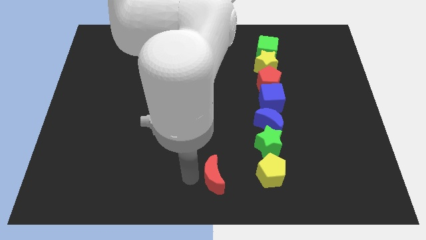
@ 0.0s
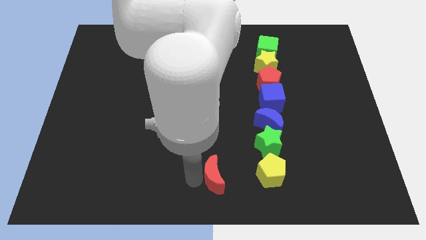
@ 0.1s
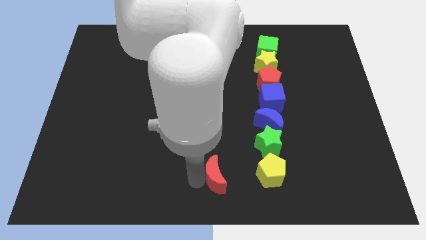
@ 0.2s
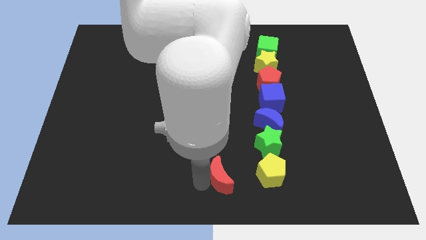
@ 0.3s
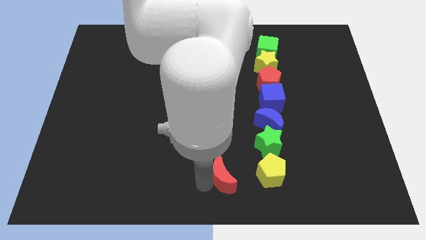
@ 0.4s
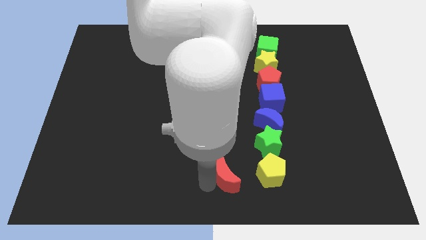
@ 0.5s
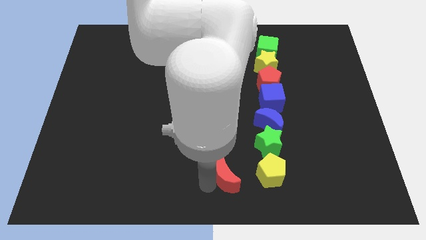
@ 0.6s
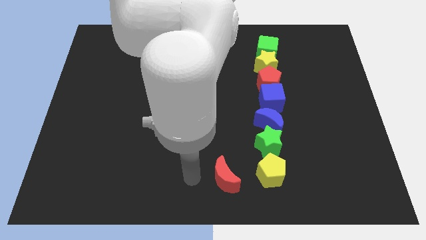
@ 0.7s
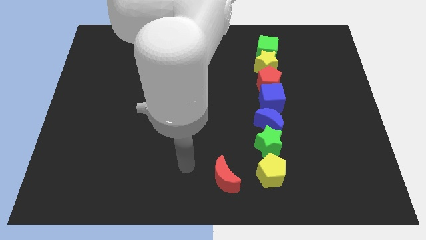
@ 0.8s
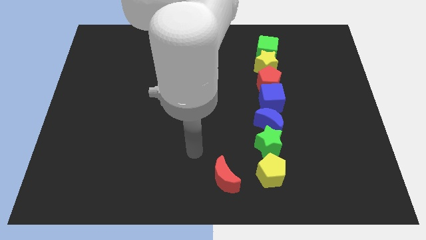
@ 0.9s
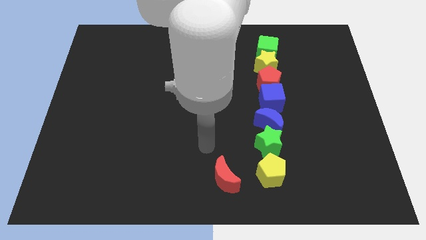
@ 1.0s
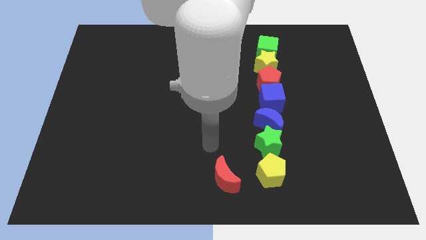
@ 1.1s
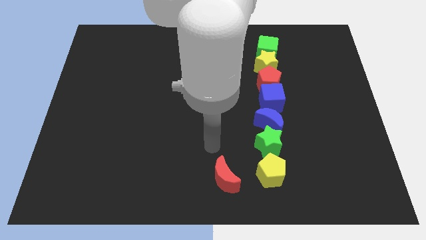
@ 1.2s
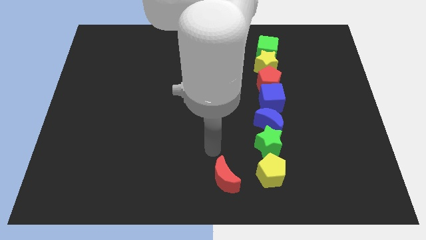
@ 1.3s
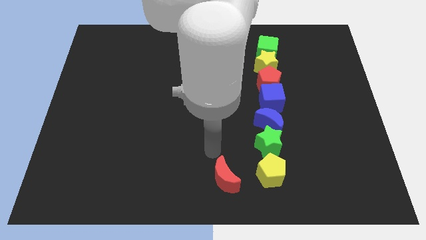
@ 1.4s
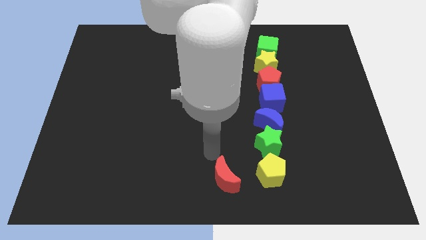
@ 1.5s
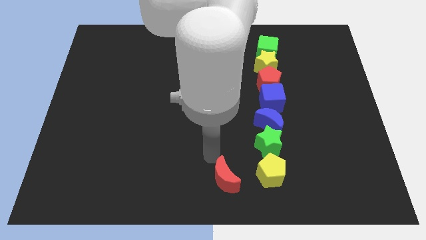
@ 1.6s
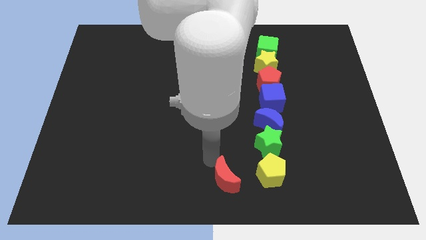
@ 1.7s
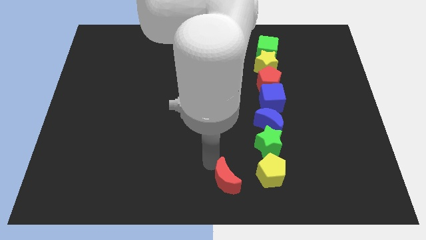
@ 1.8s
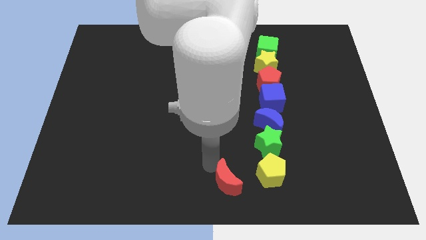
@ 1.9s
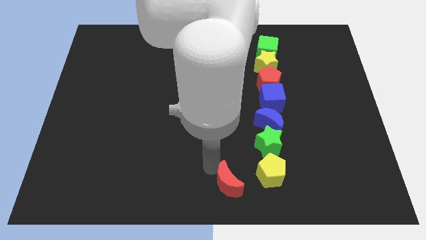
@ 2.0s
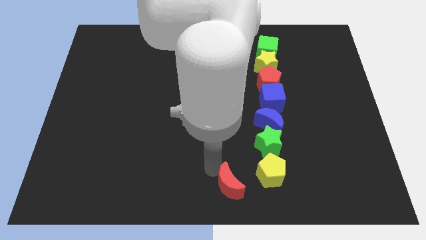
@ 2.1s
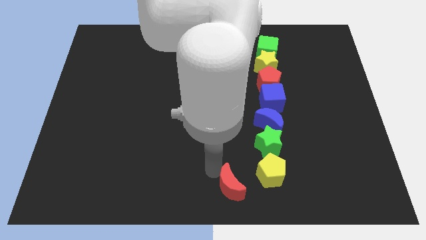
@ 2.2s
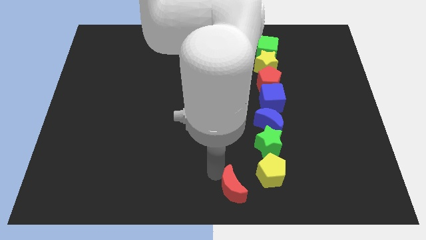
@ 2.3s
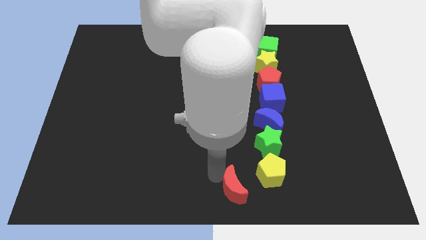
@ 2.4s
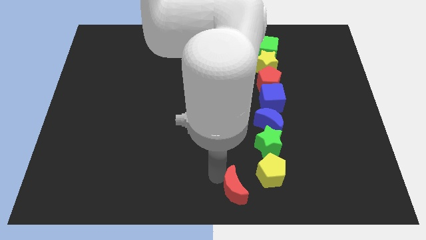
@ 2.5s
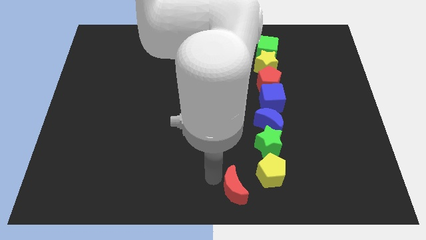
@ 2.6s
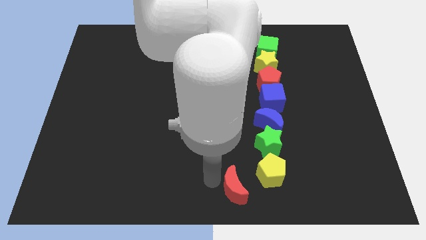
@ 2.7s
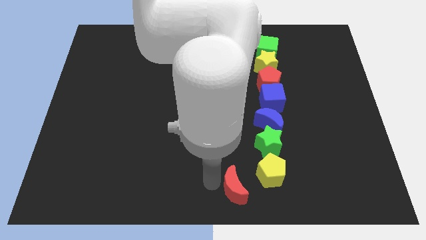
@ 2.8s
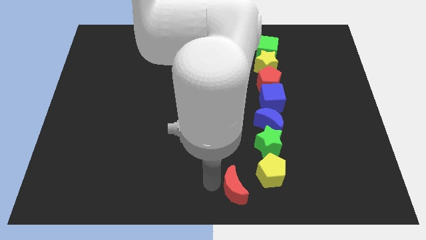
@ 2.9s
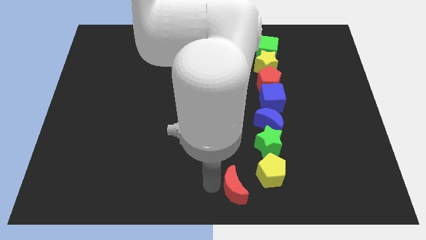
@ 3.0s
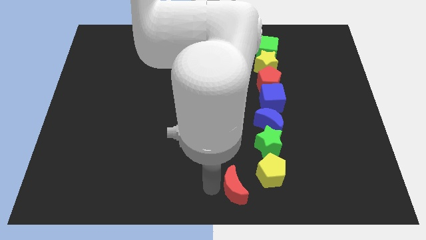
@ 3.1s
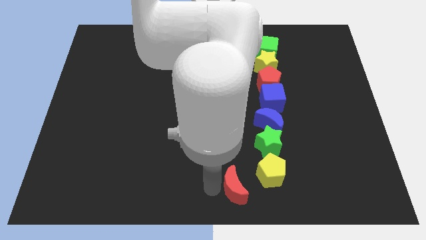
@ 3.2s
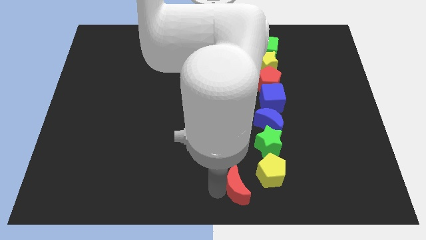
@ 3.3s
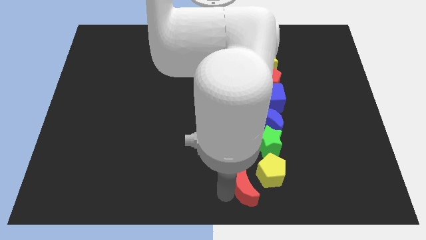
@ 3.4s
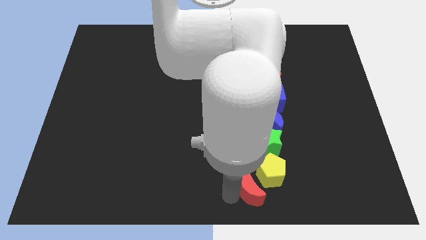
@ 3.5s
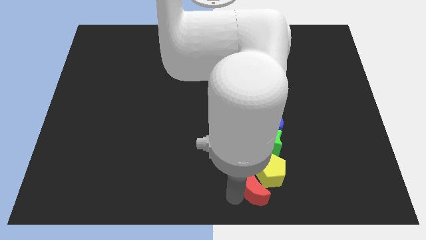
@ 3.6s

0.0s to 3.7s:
move the red crescent to the bottom left of the yellow pentagon

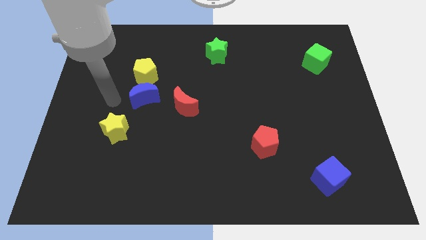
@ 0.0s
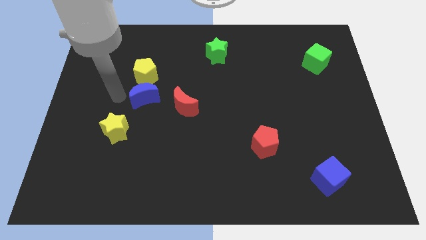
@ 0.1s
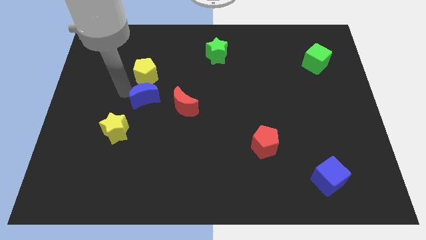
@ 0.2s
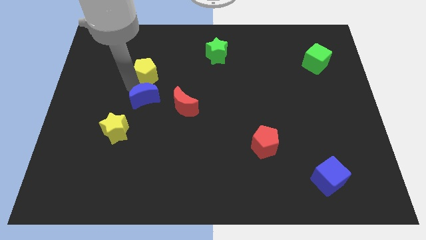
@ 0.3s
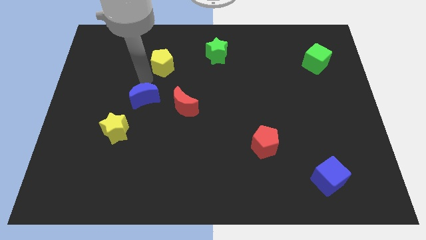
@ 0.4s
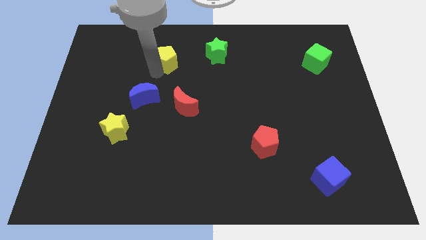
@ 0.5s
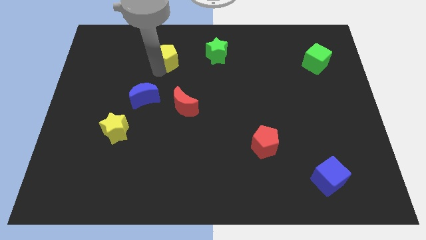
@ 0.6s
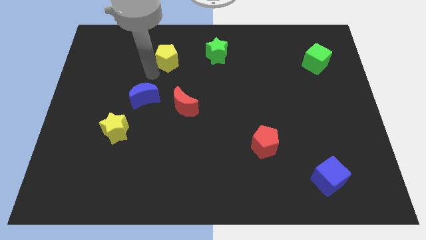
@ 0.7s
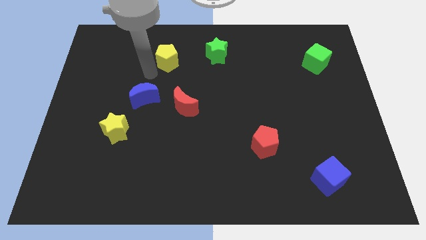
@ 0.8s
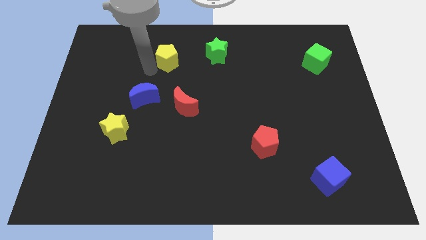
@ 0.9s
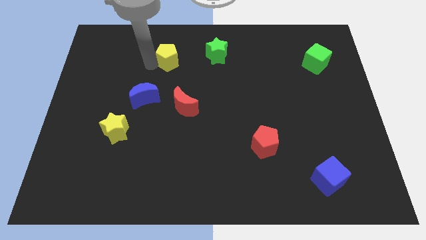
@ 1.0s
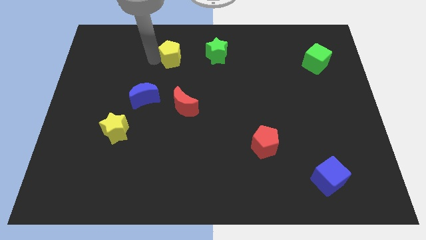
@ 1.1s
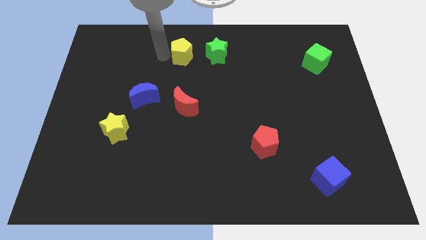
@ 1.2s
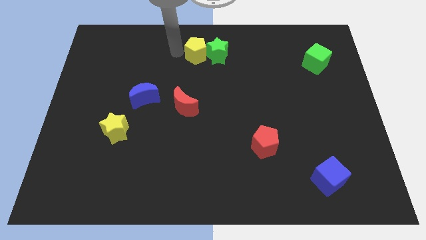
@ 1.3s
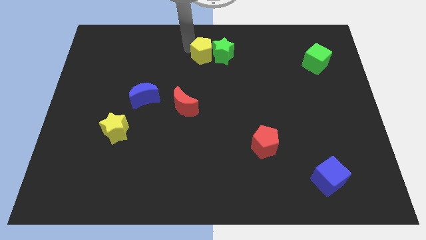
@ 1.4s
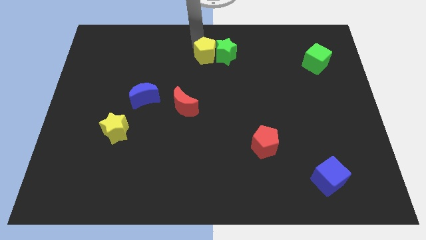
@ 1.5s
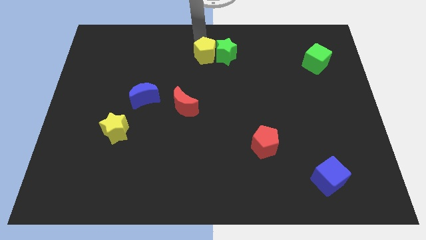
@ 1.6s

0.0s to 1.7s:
move the yellow pentagon into the green star

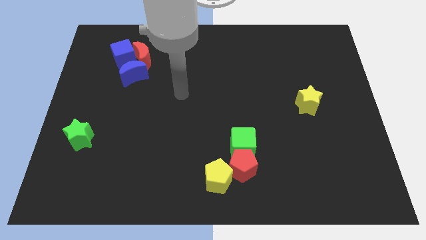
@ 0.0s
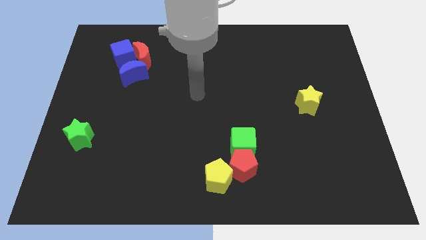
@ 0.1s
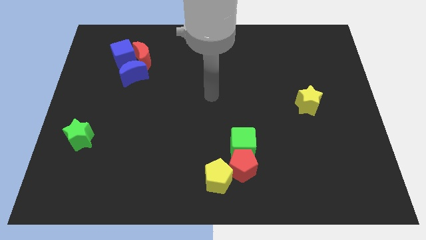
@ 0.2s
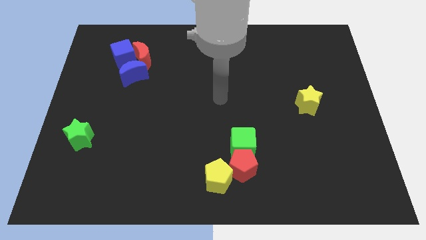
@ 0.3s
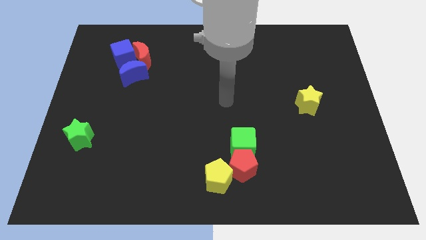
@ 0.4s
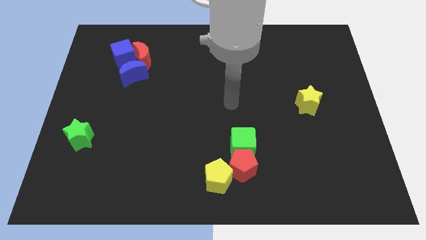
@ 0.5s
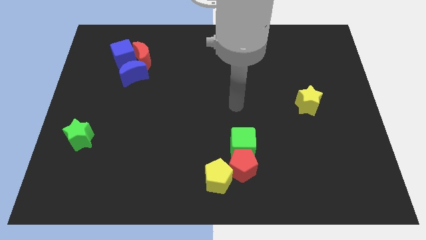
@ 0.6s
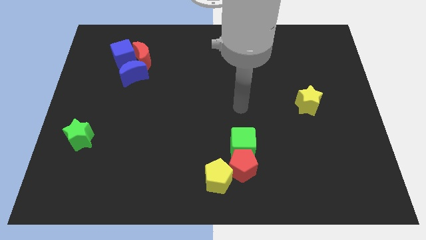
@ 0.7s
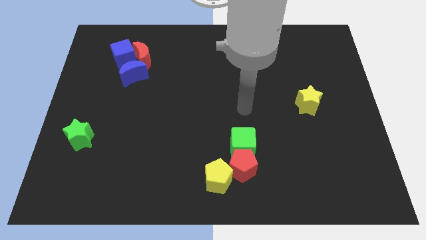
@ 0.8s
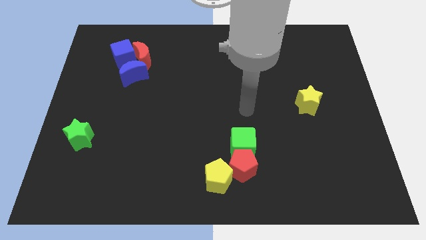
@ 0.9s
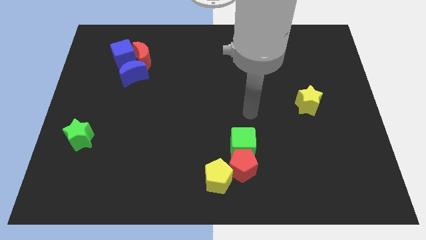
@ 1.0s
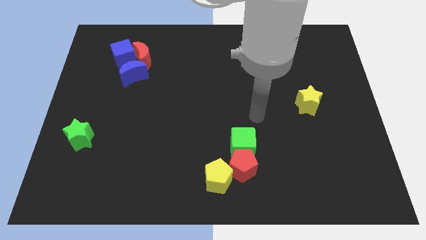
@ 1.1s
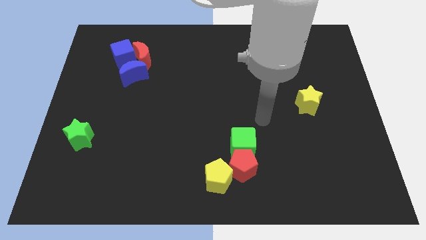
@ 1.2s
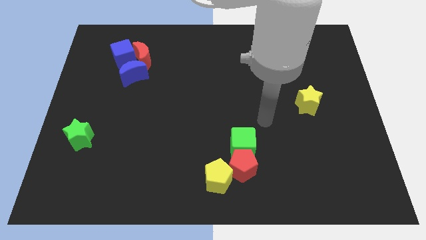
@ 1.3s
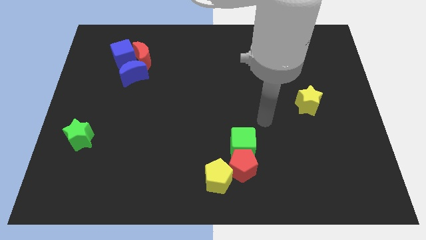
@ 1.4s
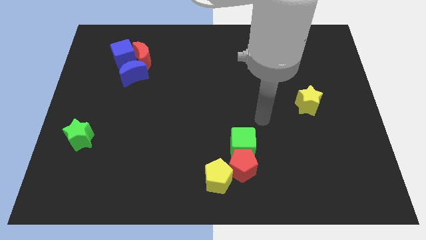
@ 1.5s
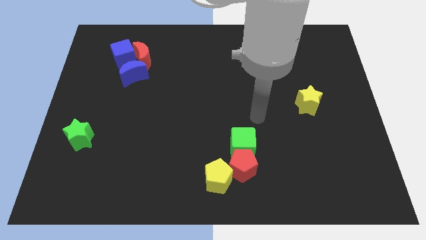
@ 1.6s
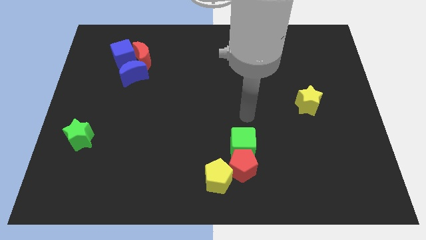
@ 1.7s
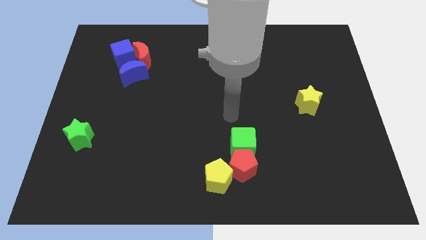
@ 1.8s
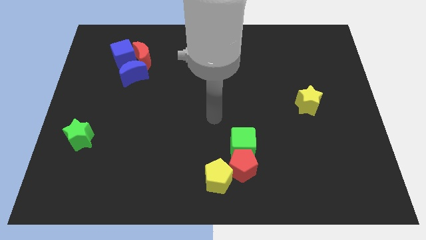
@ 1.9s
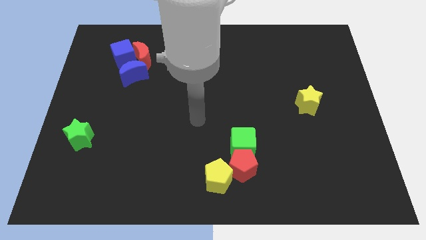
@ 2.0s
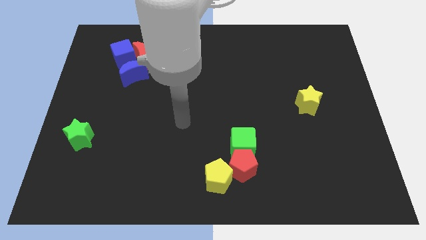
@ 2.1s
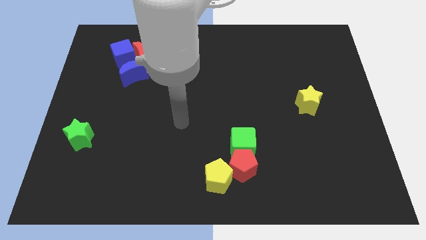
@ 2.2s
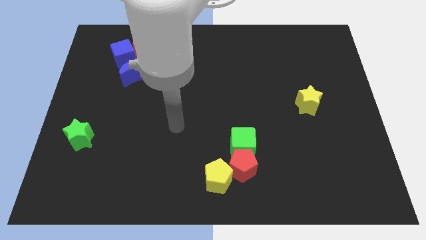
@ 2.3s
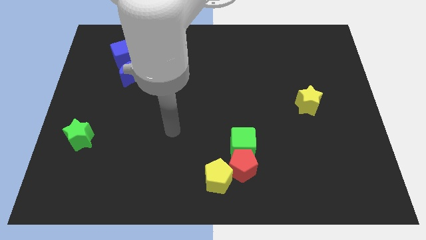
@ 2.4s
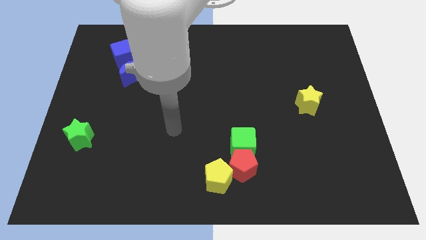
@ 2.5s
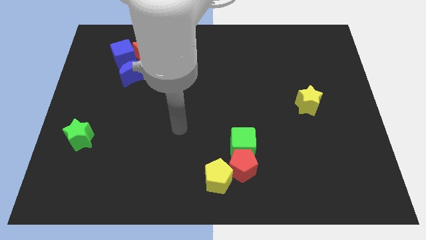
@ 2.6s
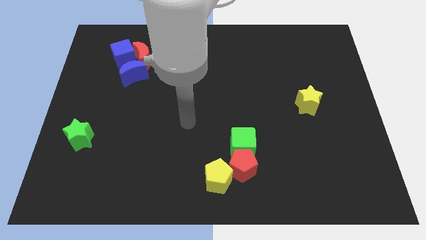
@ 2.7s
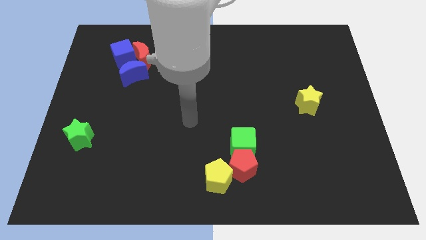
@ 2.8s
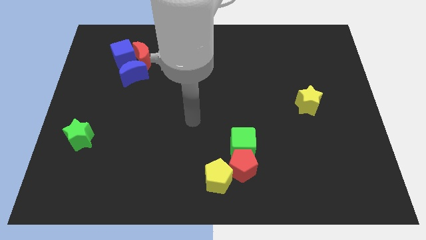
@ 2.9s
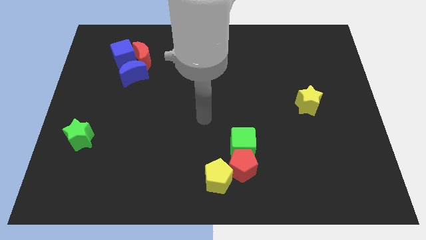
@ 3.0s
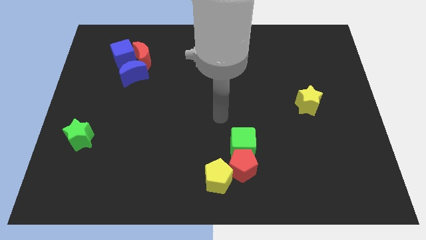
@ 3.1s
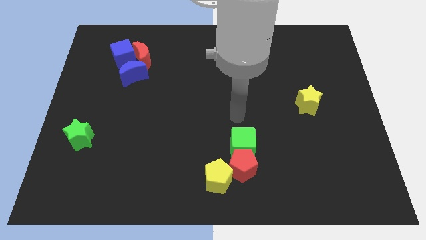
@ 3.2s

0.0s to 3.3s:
push arm above the green cube

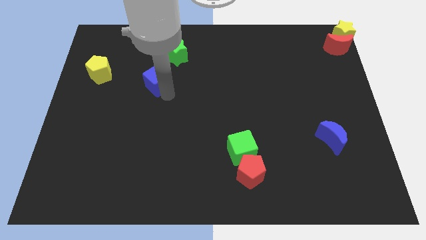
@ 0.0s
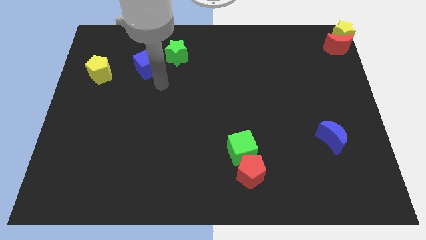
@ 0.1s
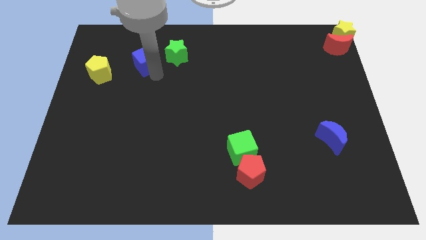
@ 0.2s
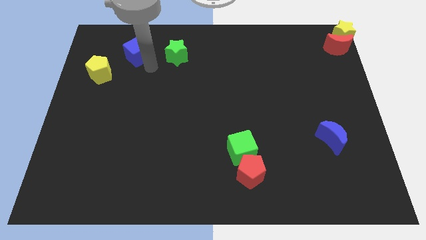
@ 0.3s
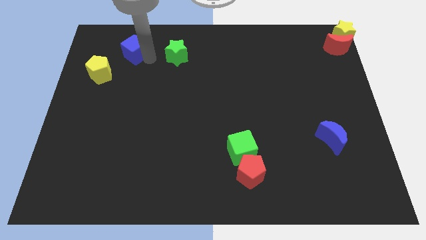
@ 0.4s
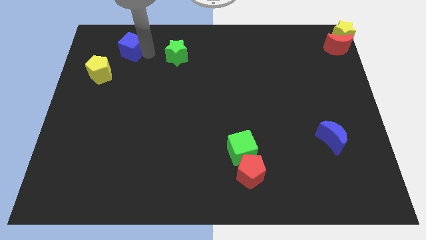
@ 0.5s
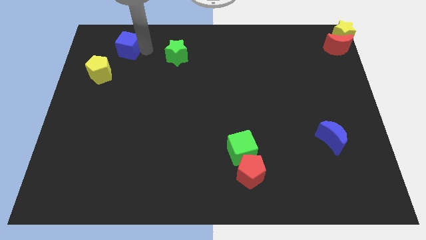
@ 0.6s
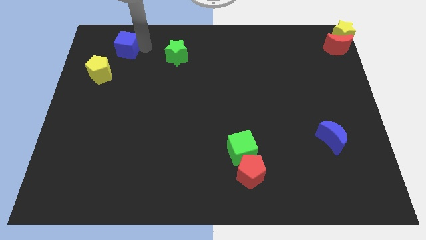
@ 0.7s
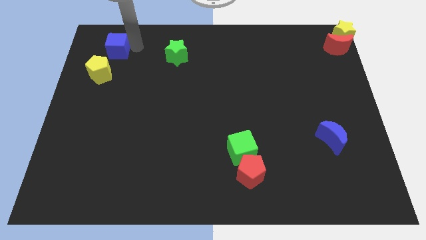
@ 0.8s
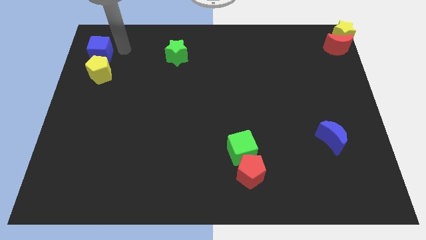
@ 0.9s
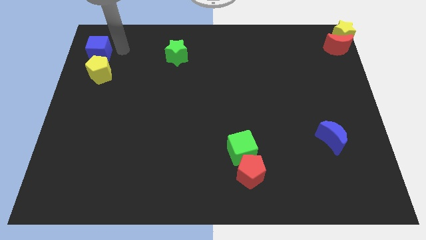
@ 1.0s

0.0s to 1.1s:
place blue cube on top of yellow pentagon
